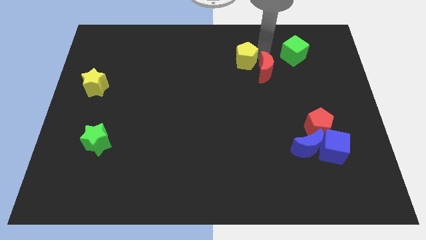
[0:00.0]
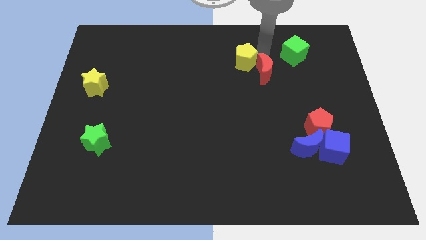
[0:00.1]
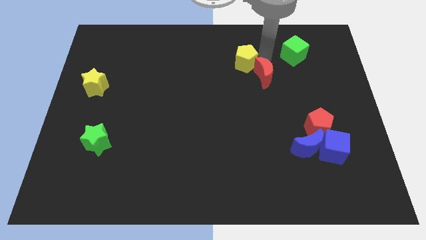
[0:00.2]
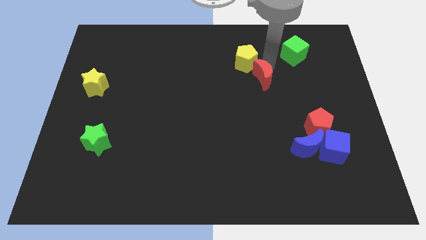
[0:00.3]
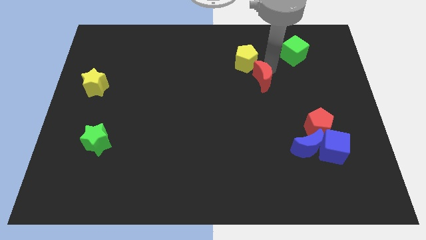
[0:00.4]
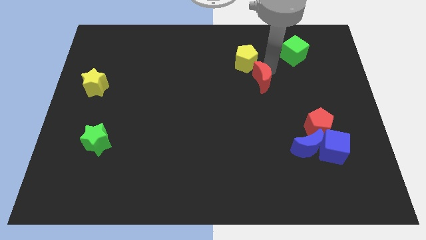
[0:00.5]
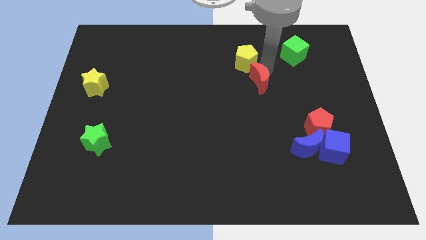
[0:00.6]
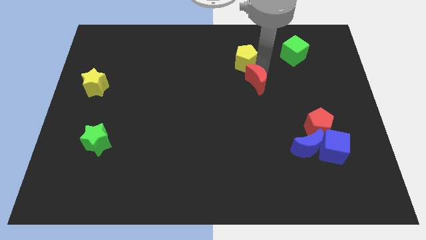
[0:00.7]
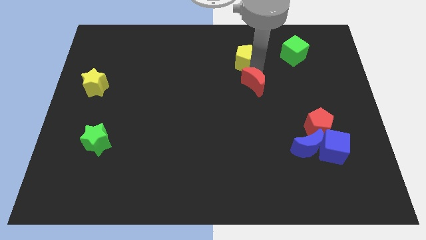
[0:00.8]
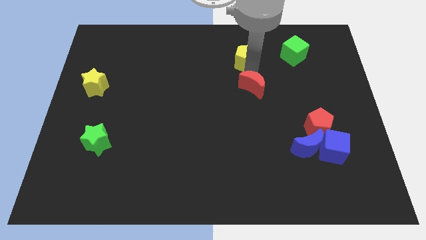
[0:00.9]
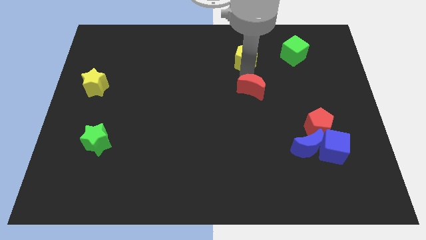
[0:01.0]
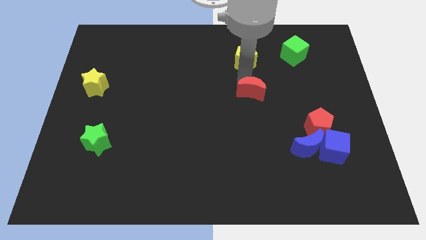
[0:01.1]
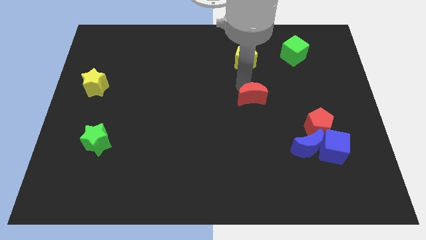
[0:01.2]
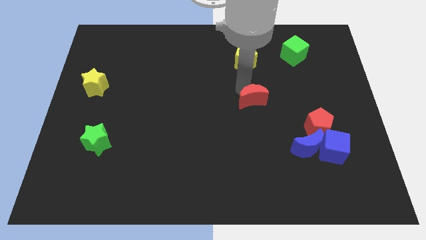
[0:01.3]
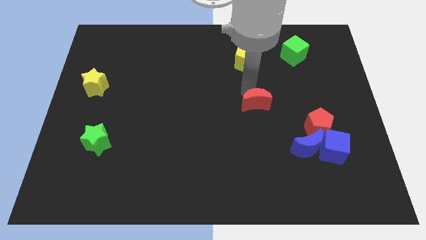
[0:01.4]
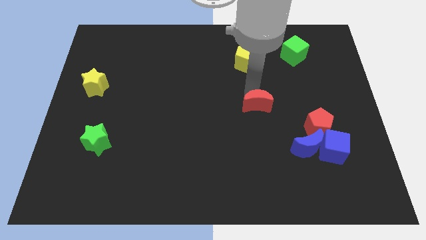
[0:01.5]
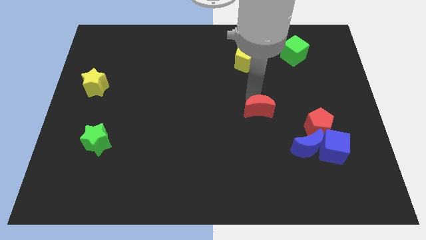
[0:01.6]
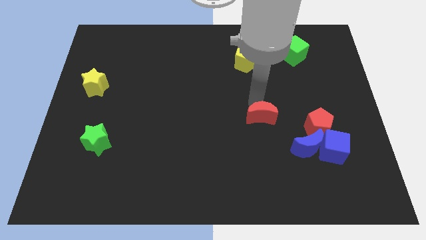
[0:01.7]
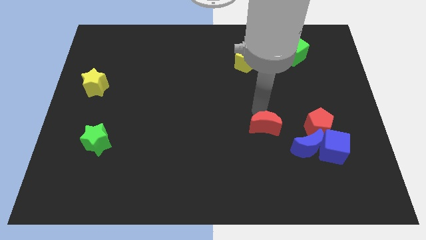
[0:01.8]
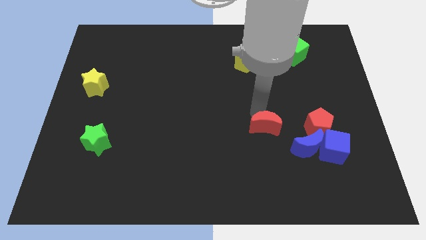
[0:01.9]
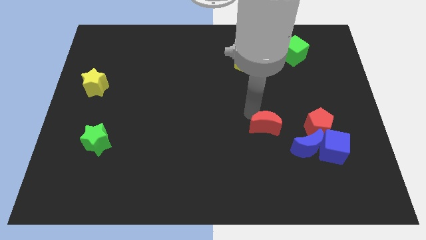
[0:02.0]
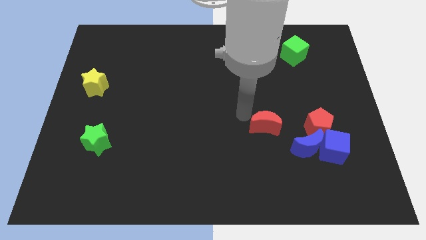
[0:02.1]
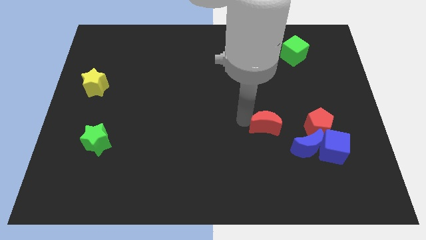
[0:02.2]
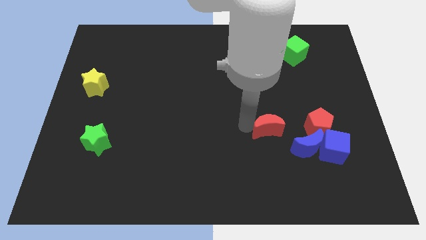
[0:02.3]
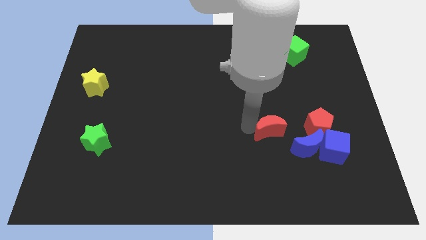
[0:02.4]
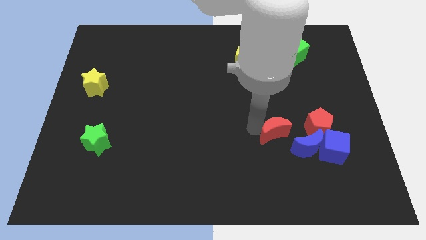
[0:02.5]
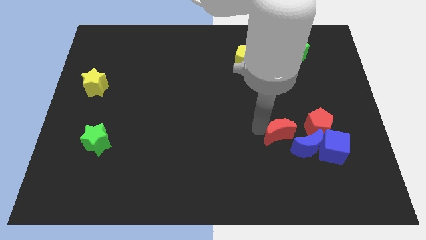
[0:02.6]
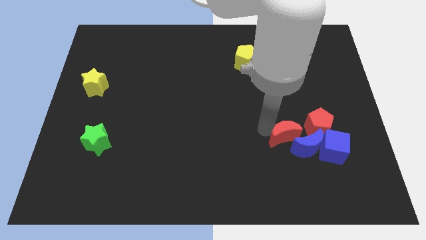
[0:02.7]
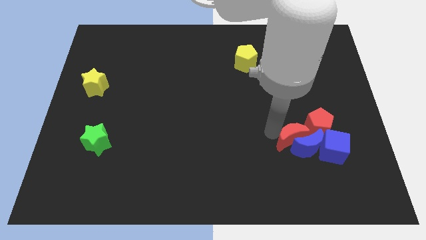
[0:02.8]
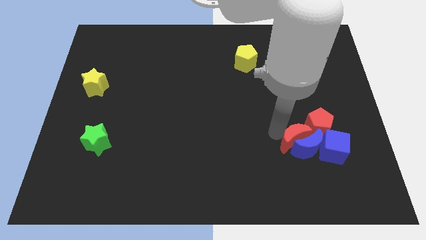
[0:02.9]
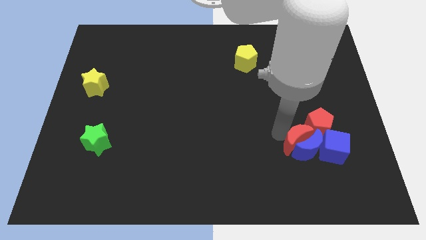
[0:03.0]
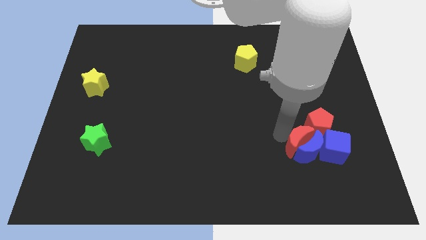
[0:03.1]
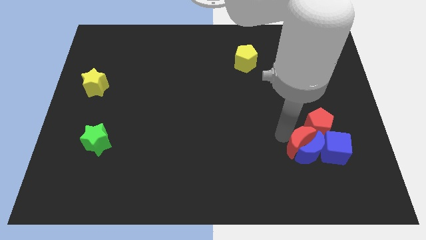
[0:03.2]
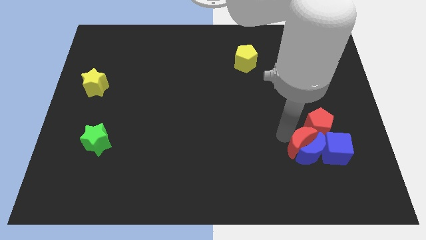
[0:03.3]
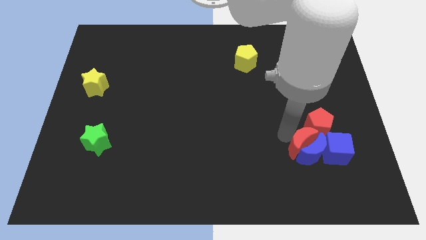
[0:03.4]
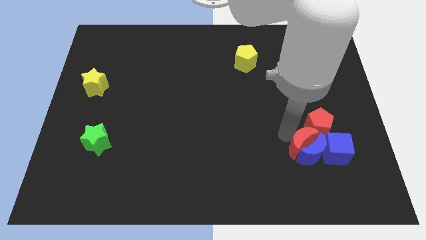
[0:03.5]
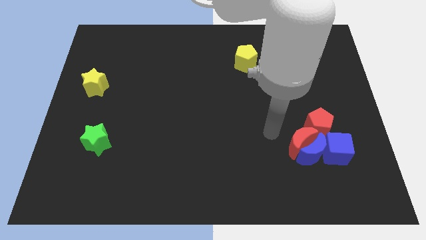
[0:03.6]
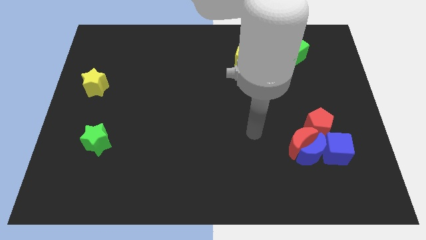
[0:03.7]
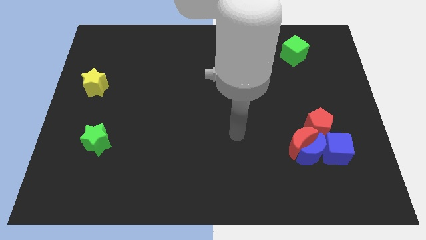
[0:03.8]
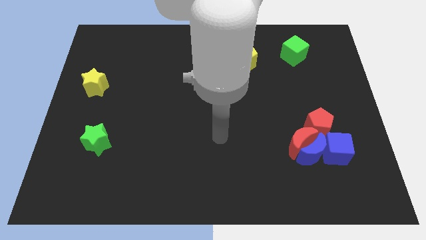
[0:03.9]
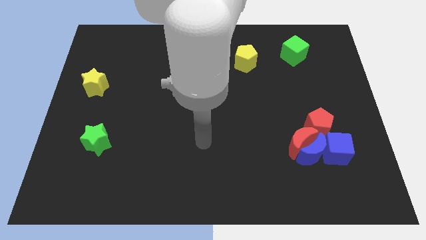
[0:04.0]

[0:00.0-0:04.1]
move the red crescent into the group of blocks

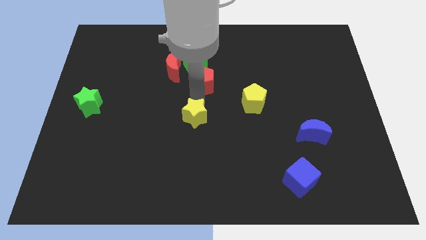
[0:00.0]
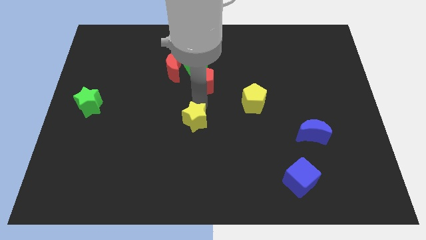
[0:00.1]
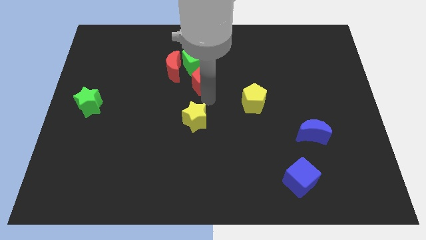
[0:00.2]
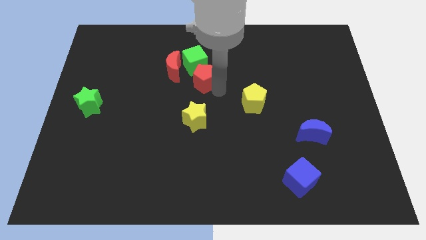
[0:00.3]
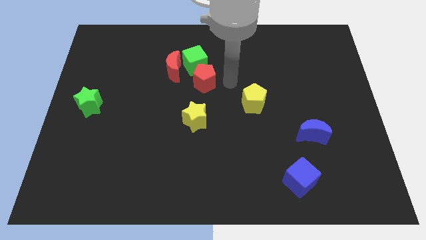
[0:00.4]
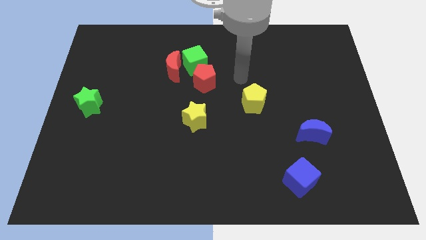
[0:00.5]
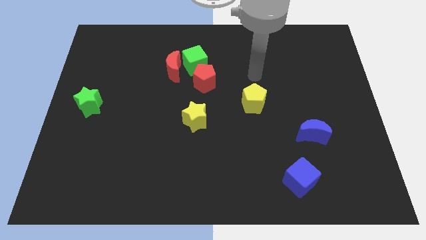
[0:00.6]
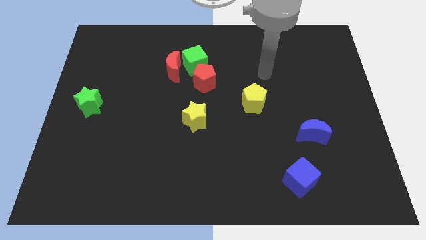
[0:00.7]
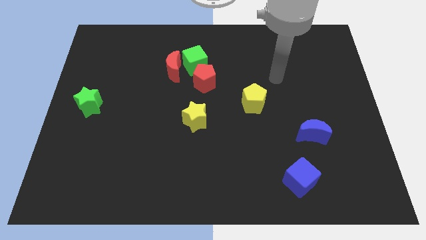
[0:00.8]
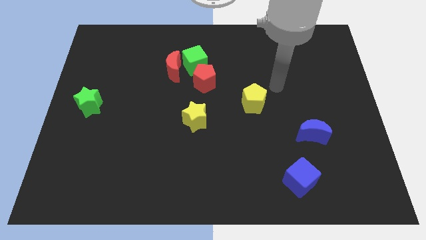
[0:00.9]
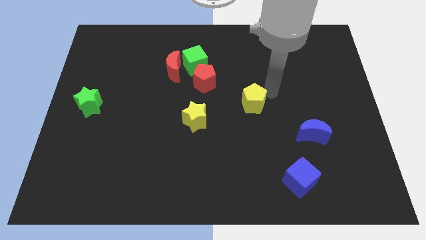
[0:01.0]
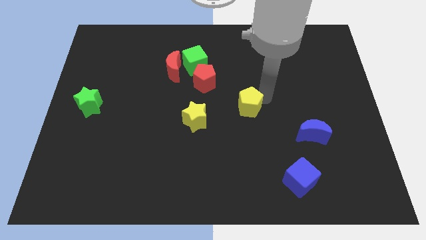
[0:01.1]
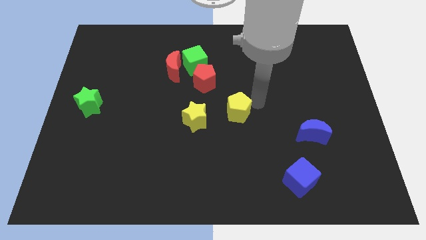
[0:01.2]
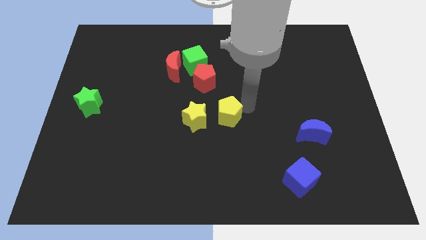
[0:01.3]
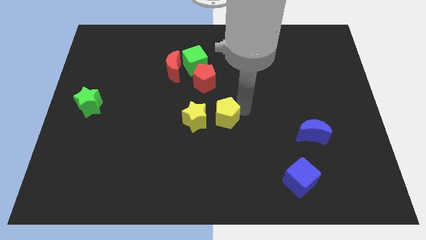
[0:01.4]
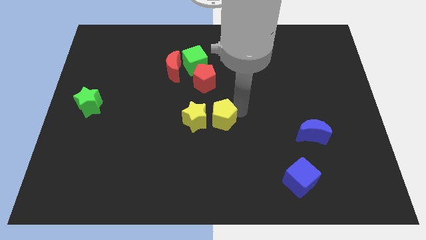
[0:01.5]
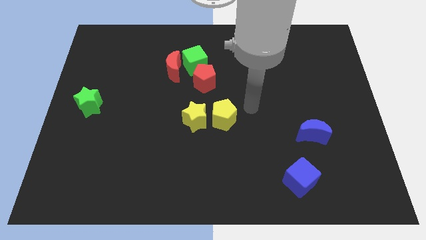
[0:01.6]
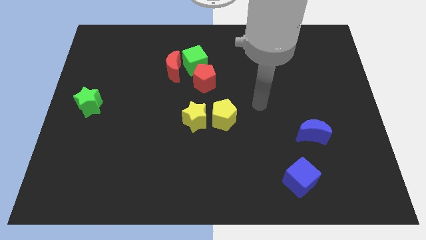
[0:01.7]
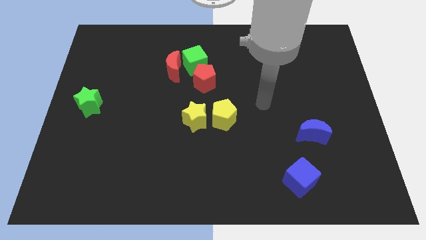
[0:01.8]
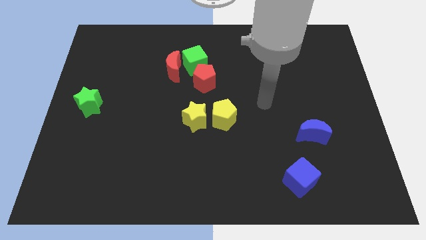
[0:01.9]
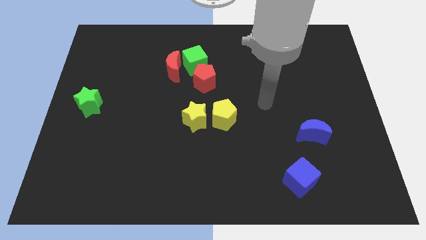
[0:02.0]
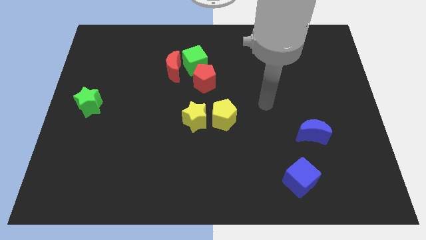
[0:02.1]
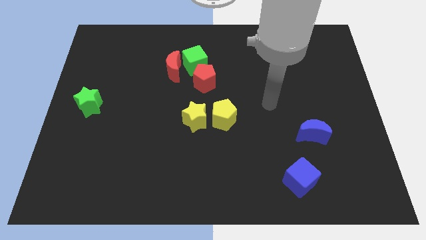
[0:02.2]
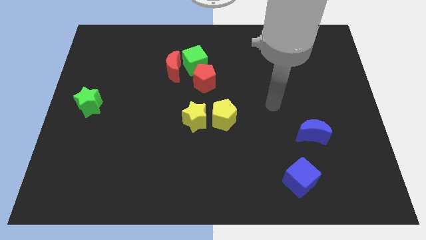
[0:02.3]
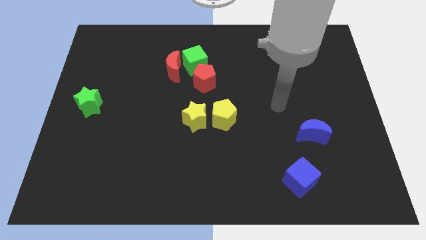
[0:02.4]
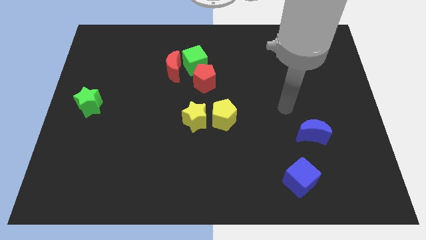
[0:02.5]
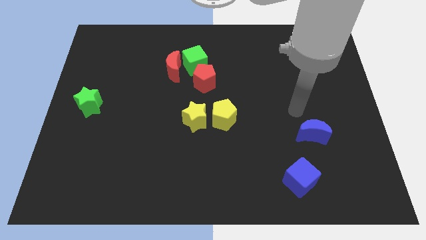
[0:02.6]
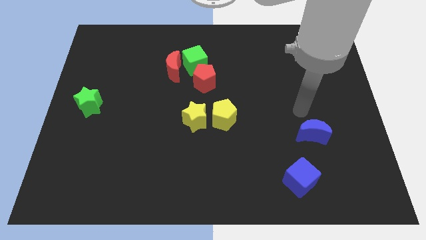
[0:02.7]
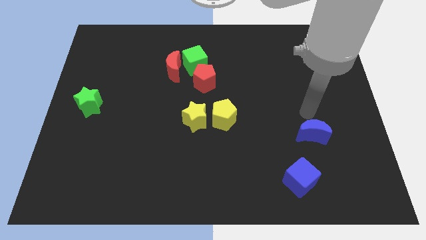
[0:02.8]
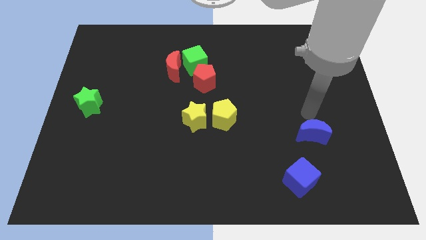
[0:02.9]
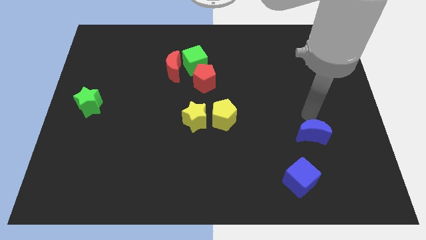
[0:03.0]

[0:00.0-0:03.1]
place yellow pentagon to the right of yellow star

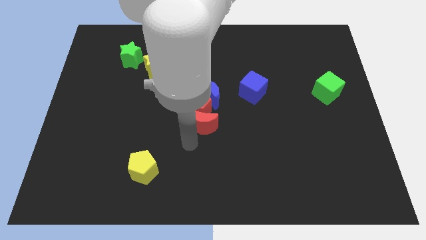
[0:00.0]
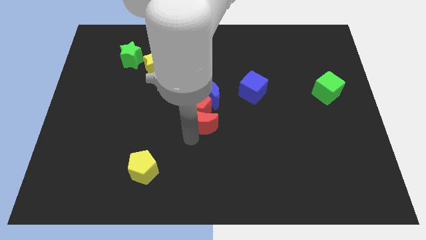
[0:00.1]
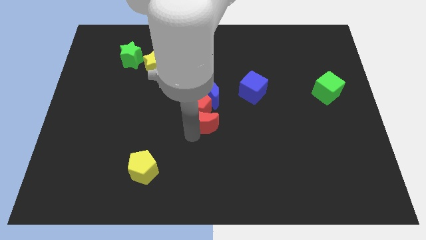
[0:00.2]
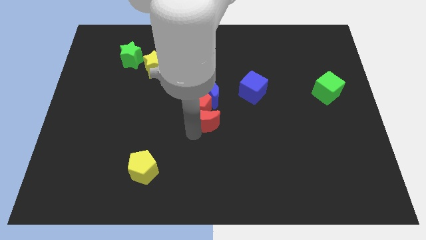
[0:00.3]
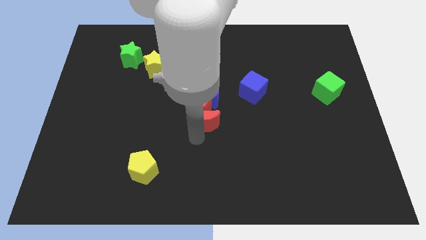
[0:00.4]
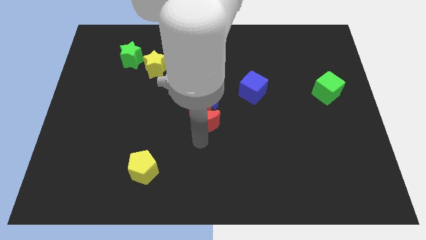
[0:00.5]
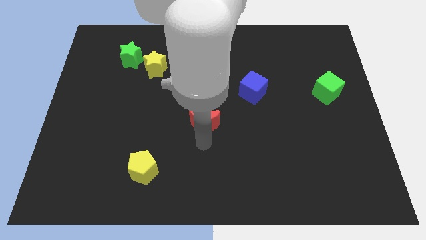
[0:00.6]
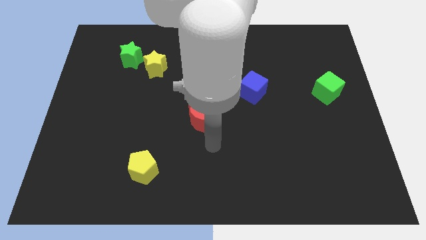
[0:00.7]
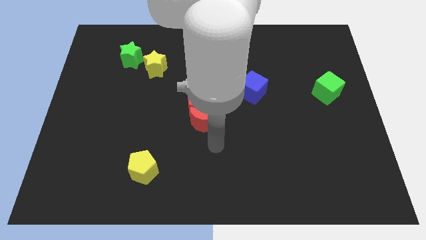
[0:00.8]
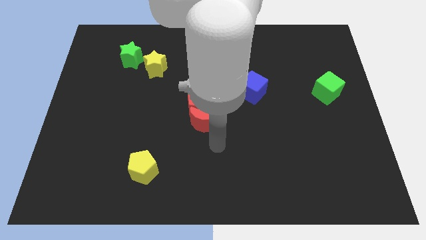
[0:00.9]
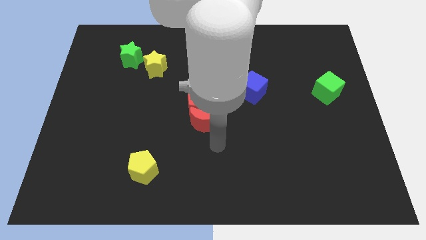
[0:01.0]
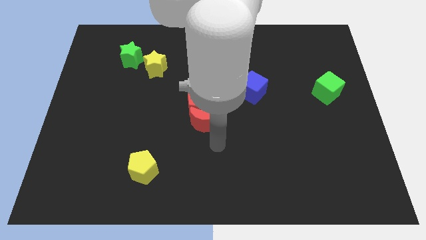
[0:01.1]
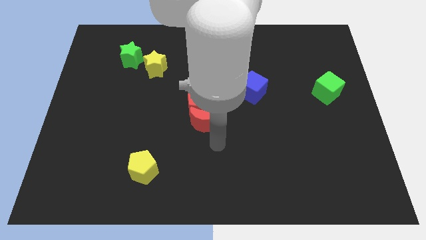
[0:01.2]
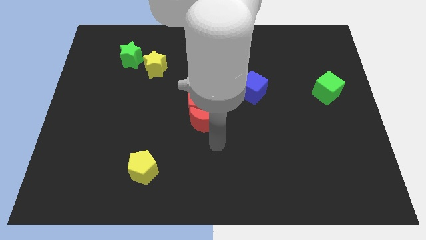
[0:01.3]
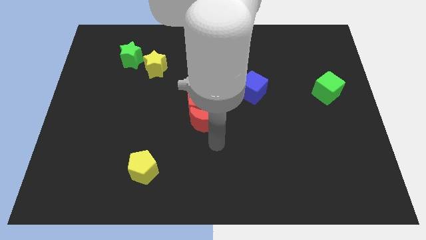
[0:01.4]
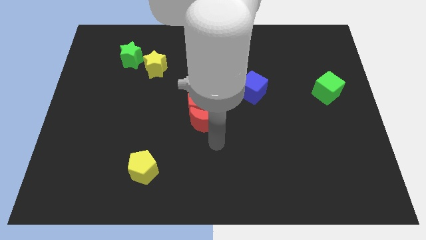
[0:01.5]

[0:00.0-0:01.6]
push the red blocks into the blue moon

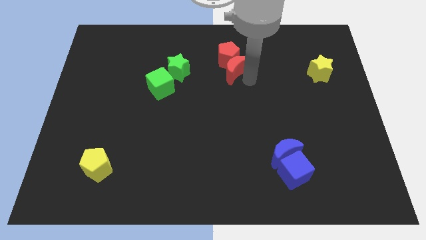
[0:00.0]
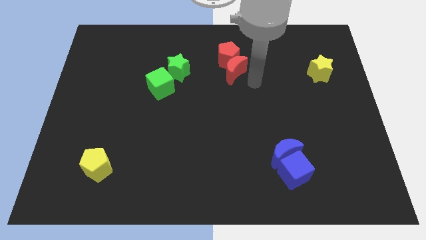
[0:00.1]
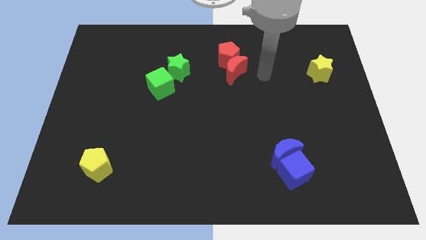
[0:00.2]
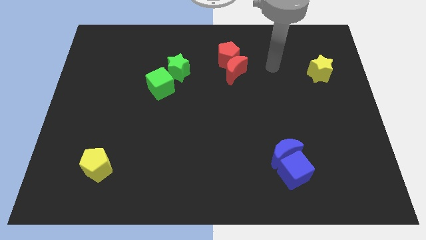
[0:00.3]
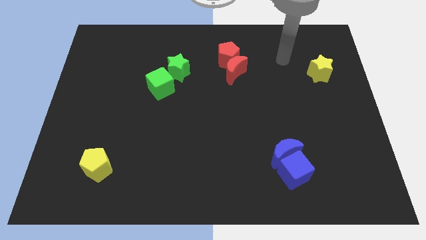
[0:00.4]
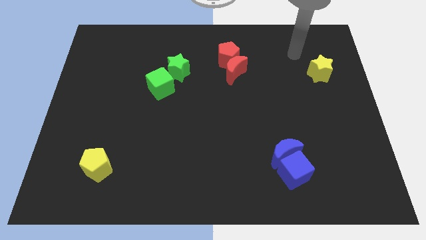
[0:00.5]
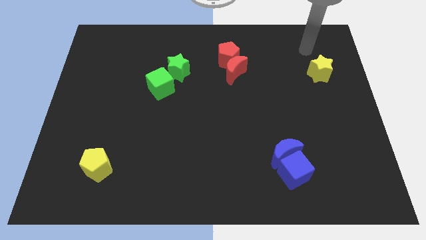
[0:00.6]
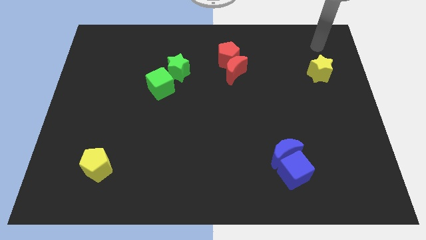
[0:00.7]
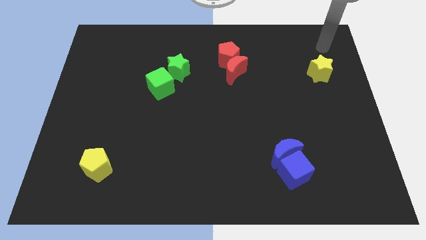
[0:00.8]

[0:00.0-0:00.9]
move the arm away from the red moon
